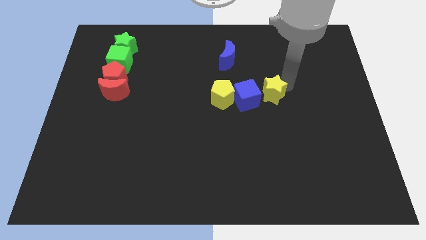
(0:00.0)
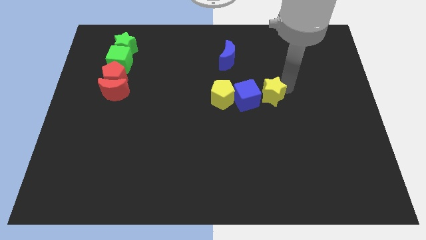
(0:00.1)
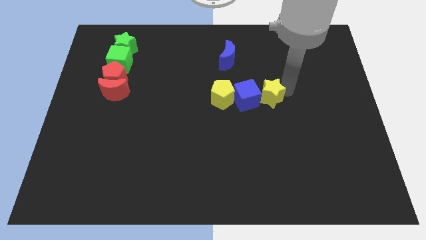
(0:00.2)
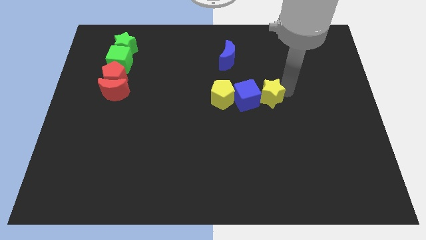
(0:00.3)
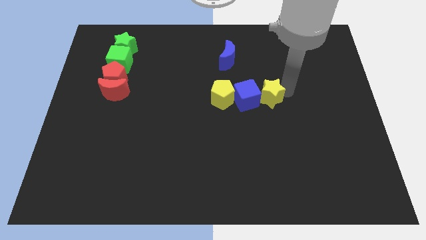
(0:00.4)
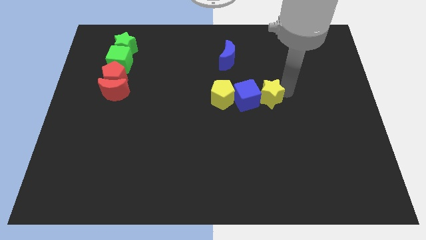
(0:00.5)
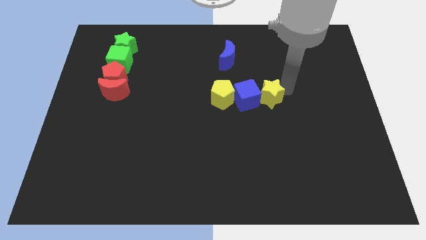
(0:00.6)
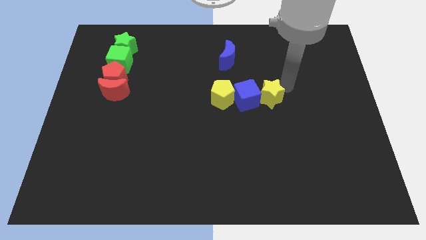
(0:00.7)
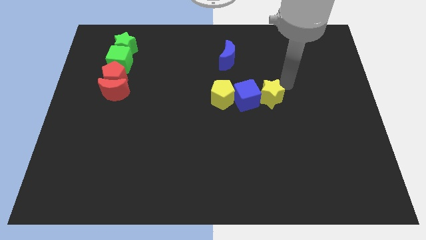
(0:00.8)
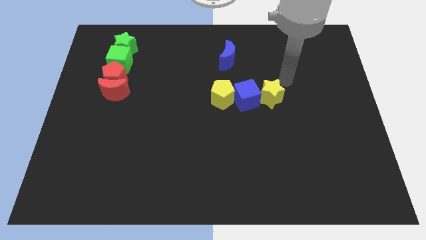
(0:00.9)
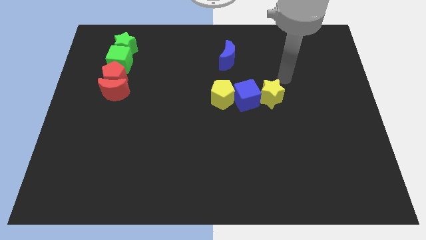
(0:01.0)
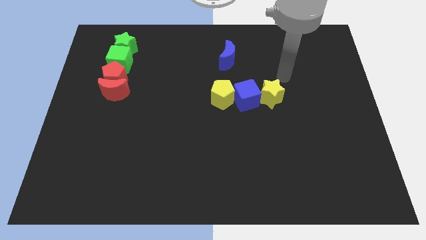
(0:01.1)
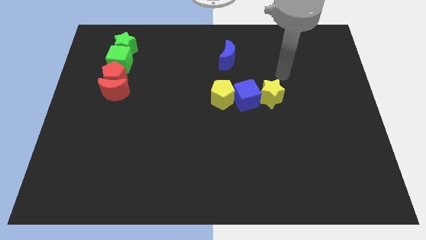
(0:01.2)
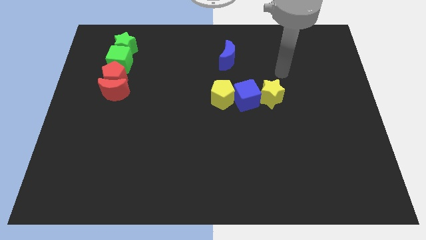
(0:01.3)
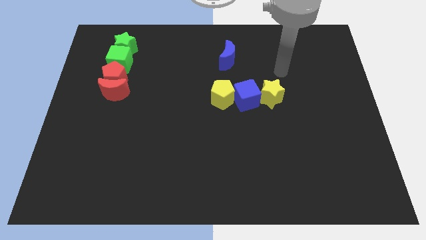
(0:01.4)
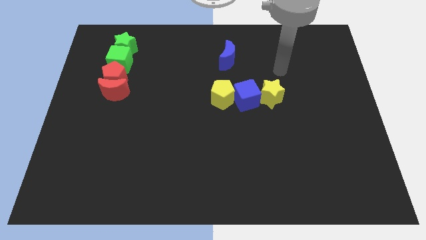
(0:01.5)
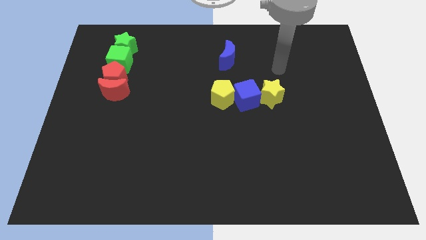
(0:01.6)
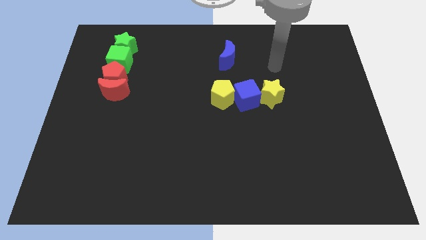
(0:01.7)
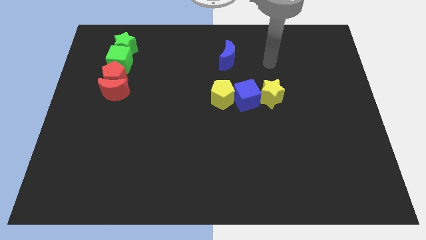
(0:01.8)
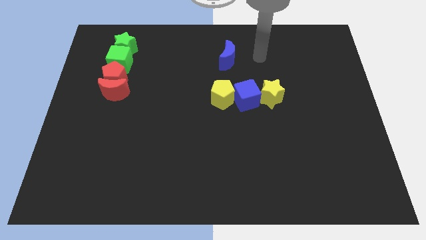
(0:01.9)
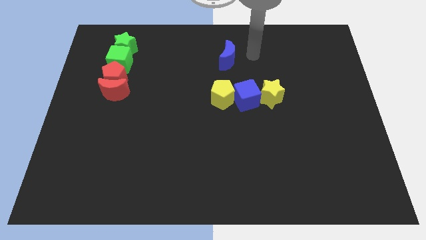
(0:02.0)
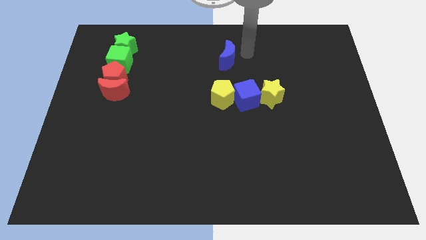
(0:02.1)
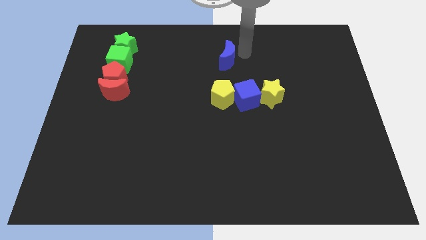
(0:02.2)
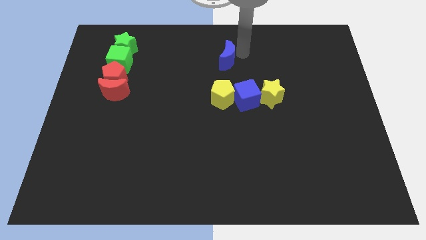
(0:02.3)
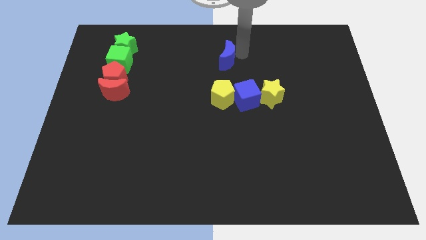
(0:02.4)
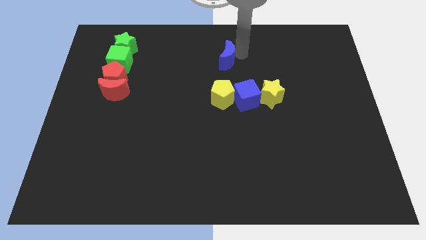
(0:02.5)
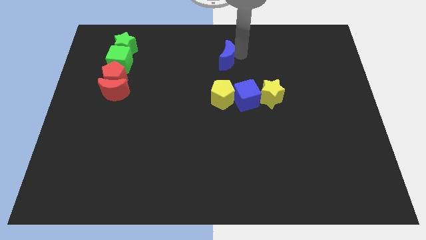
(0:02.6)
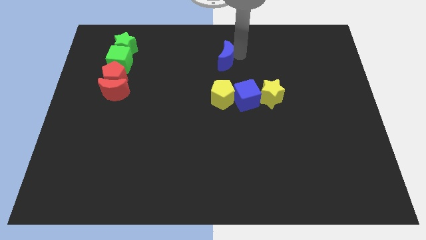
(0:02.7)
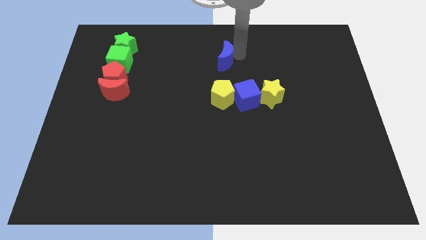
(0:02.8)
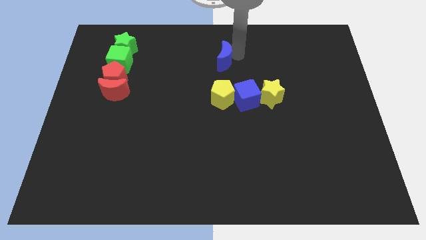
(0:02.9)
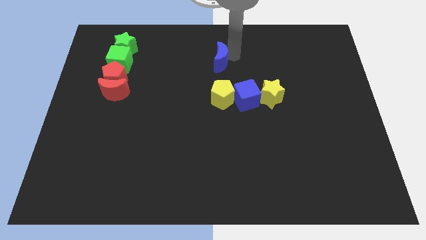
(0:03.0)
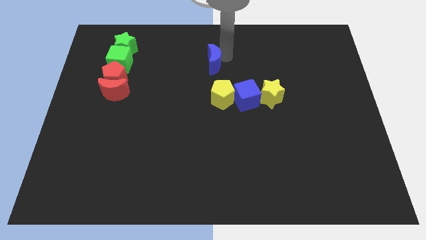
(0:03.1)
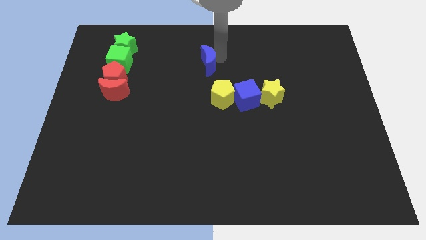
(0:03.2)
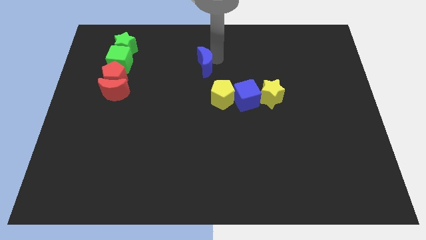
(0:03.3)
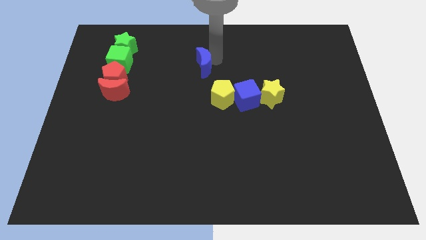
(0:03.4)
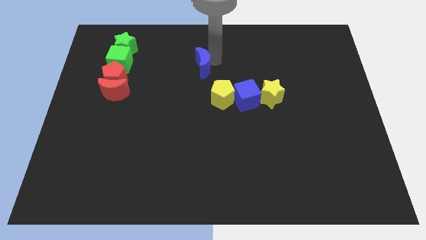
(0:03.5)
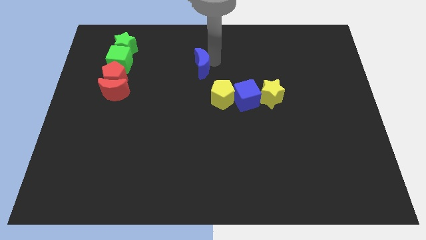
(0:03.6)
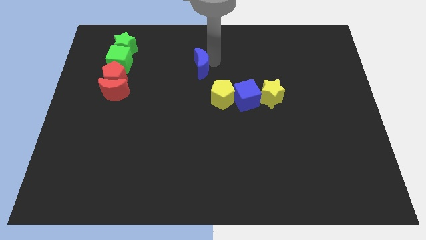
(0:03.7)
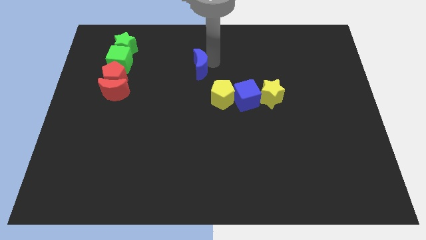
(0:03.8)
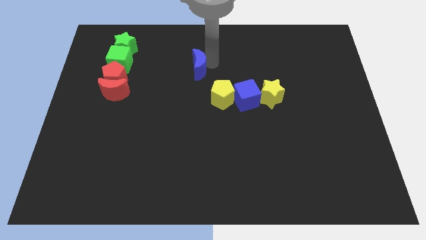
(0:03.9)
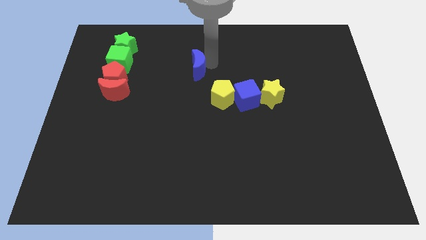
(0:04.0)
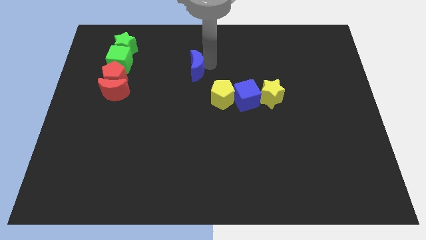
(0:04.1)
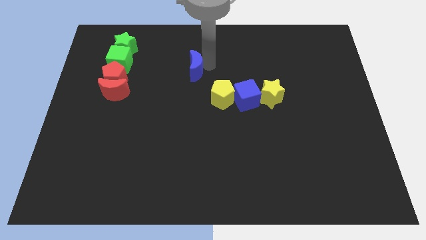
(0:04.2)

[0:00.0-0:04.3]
move the blue crescent slightly left side of the board

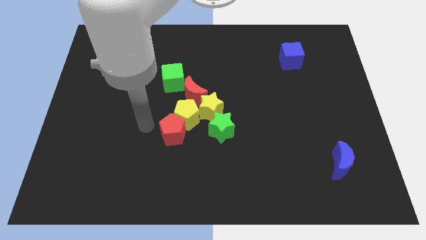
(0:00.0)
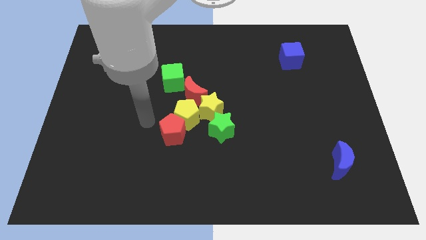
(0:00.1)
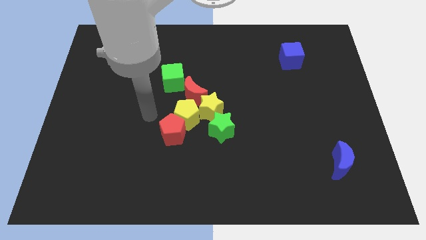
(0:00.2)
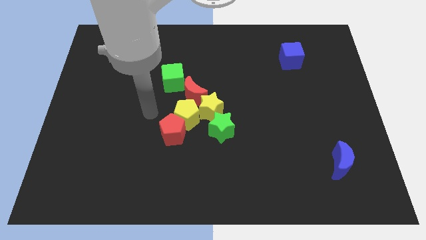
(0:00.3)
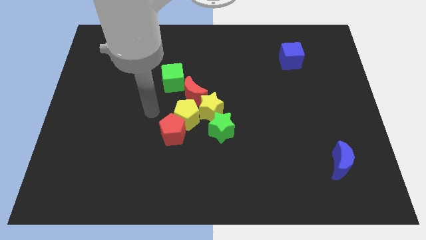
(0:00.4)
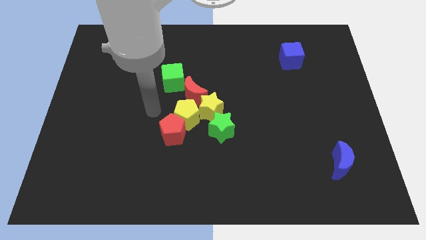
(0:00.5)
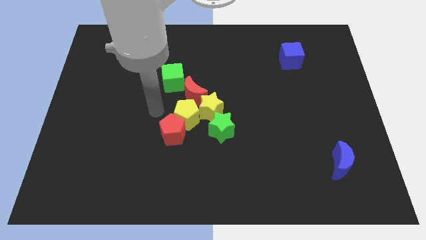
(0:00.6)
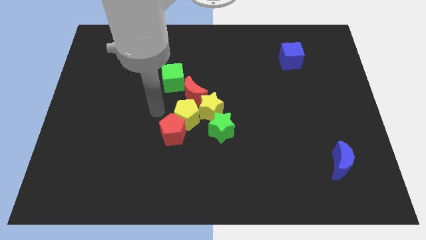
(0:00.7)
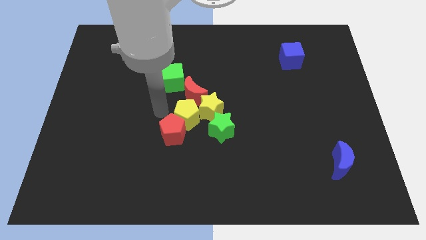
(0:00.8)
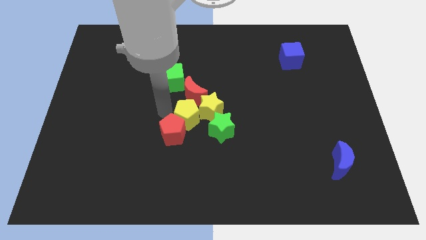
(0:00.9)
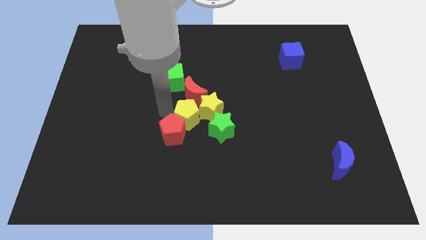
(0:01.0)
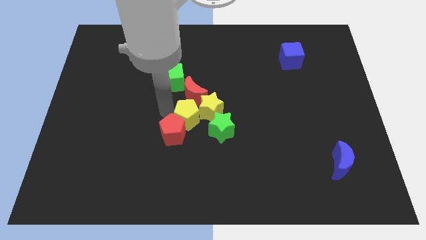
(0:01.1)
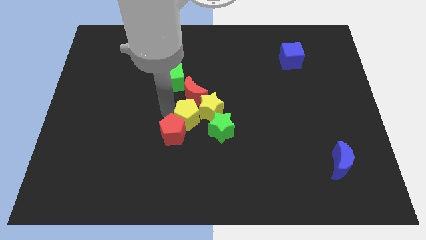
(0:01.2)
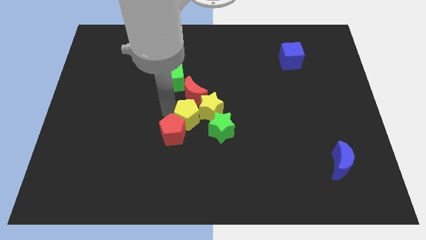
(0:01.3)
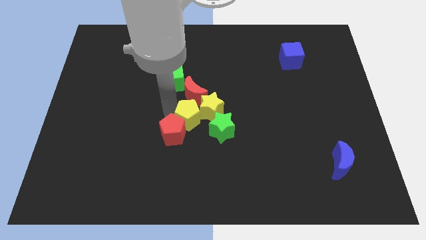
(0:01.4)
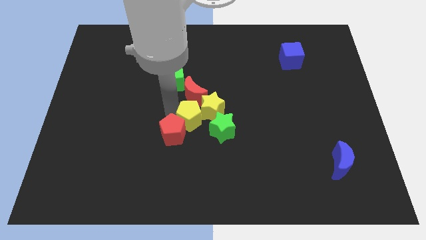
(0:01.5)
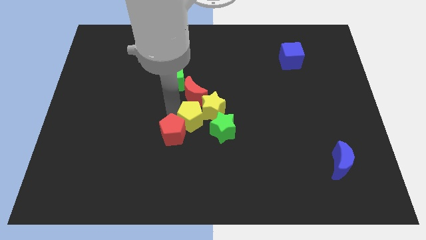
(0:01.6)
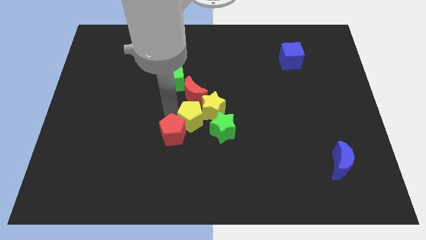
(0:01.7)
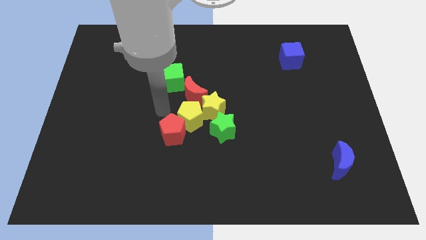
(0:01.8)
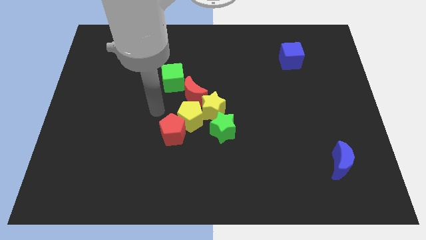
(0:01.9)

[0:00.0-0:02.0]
push the yellow pentagon to bottom left of yellow star

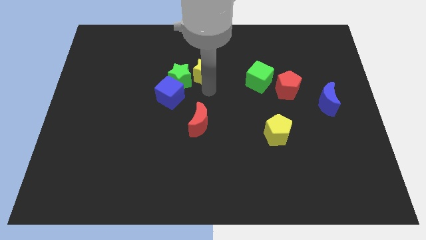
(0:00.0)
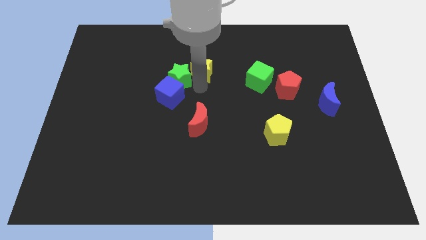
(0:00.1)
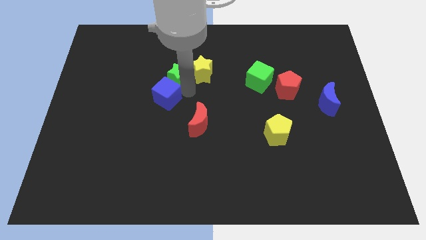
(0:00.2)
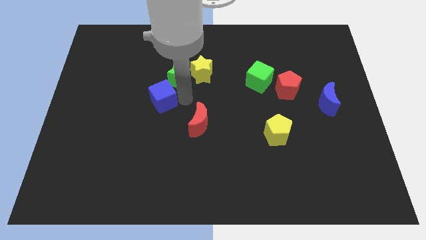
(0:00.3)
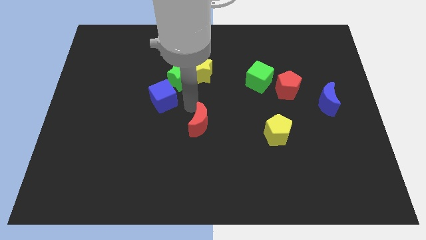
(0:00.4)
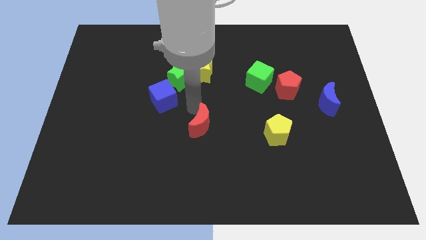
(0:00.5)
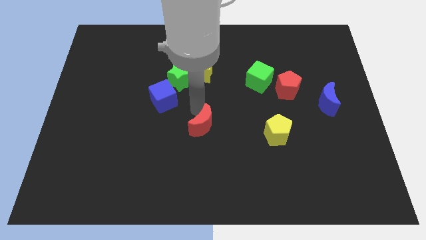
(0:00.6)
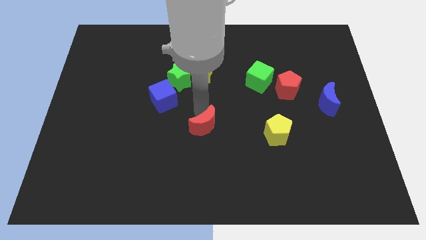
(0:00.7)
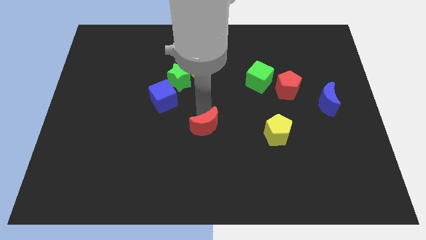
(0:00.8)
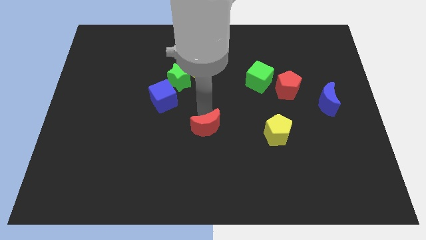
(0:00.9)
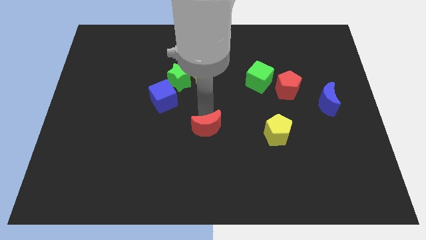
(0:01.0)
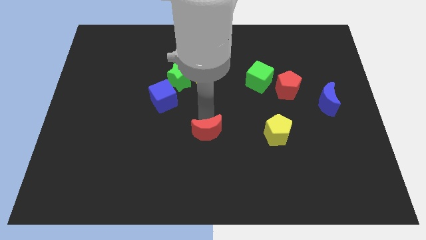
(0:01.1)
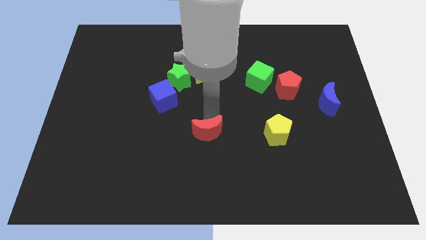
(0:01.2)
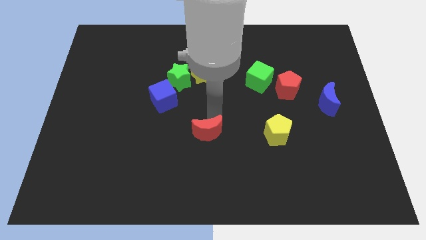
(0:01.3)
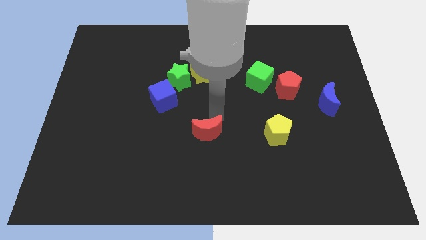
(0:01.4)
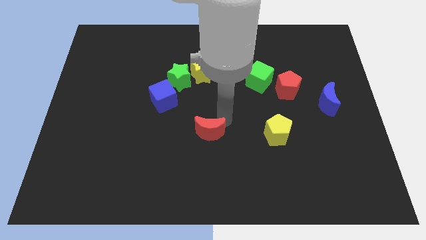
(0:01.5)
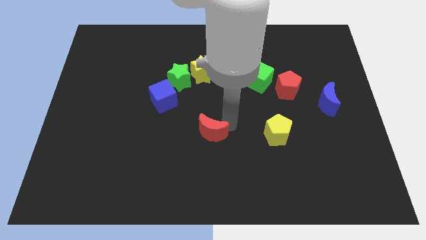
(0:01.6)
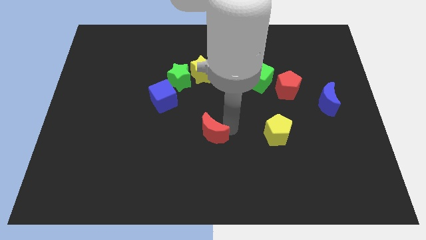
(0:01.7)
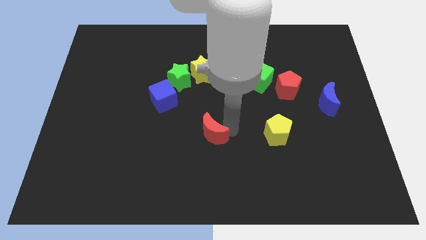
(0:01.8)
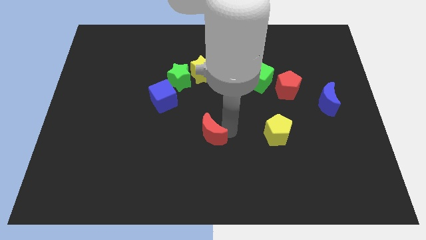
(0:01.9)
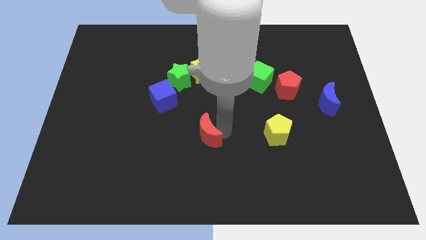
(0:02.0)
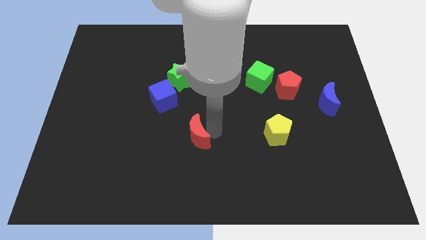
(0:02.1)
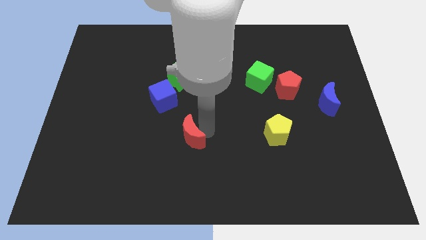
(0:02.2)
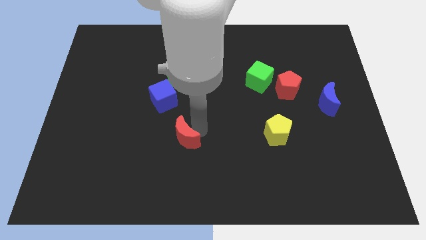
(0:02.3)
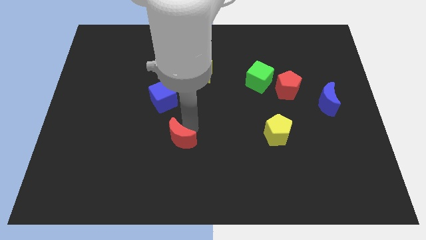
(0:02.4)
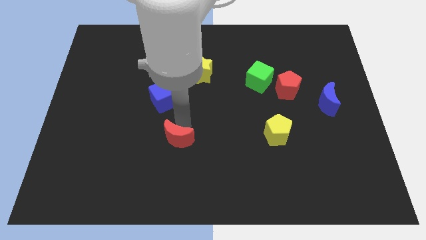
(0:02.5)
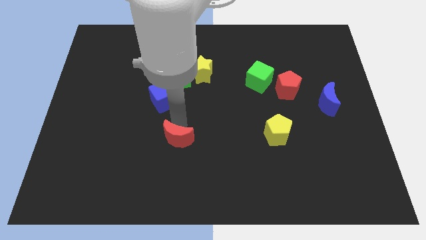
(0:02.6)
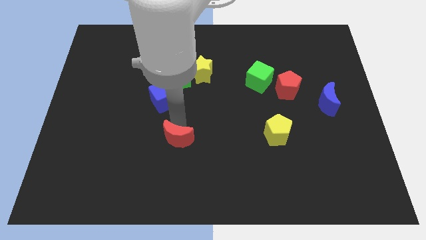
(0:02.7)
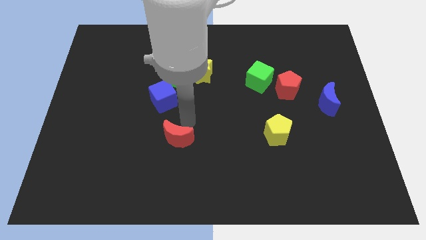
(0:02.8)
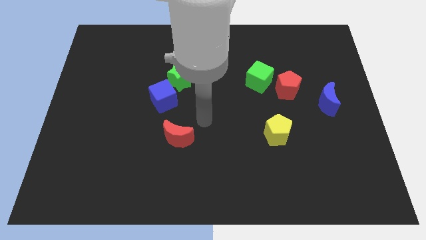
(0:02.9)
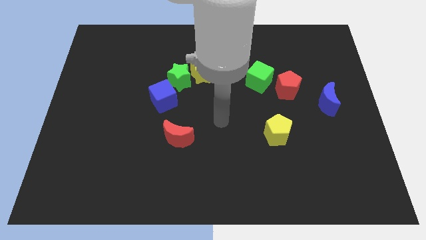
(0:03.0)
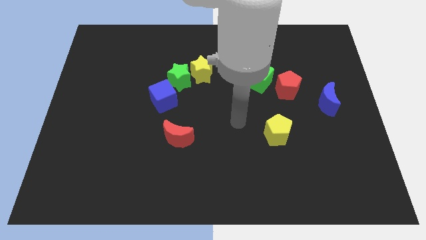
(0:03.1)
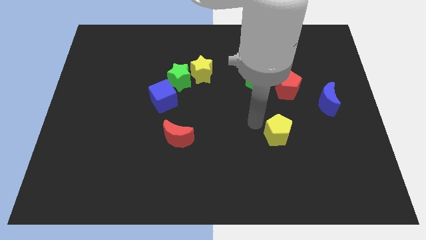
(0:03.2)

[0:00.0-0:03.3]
put the red moon parallel to the yellow pentagon
